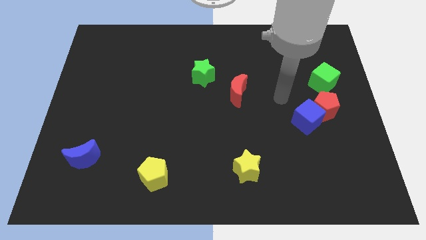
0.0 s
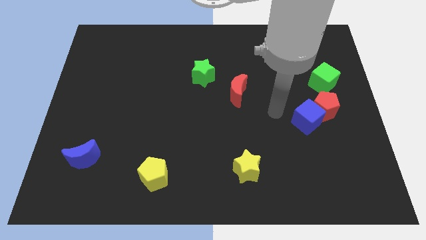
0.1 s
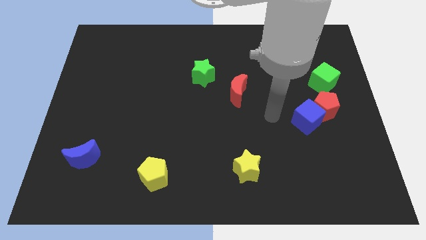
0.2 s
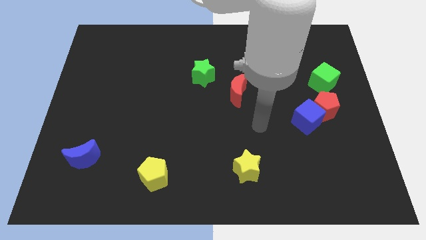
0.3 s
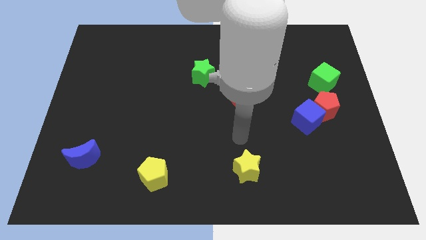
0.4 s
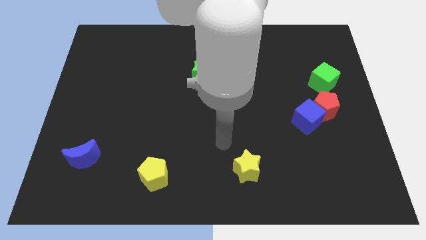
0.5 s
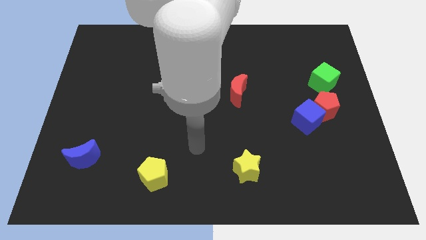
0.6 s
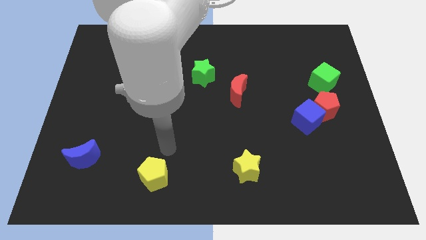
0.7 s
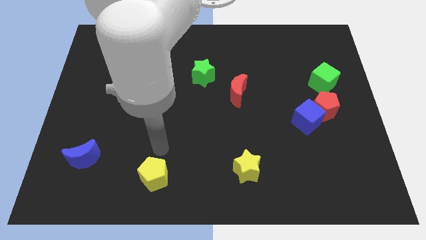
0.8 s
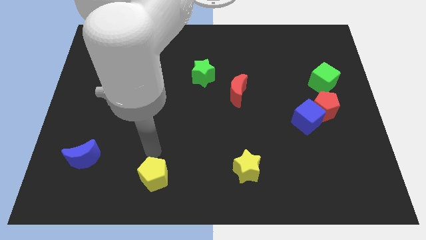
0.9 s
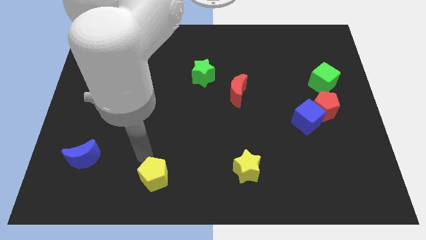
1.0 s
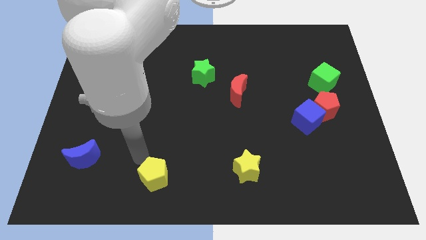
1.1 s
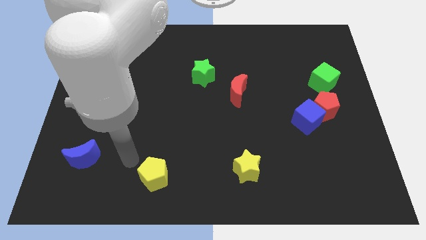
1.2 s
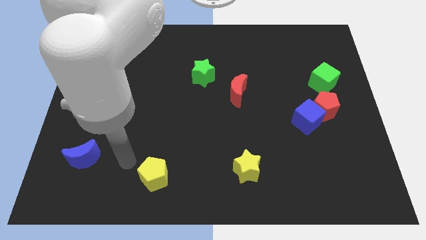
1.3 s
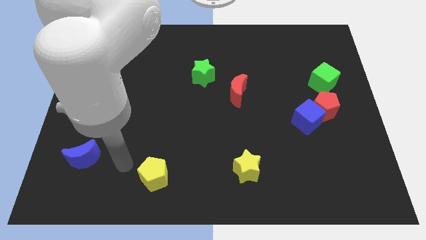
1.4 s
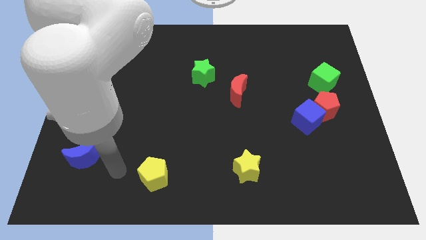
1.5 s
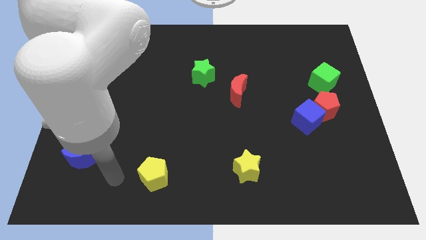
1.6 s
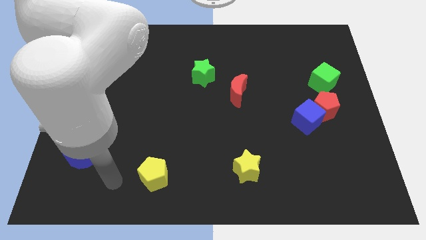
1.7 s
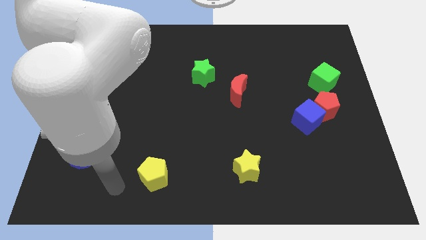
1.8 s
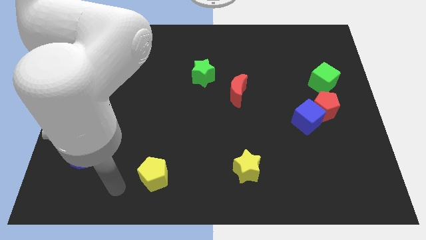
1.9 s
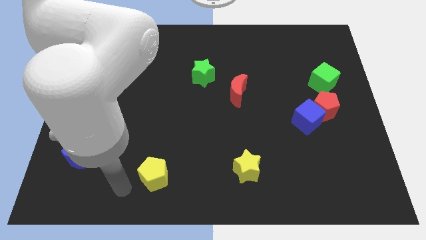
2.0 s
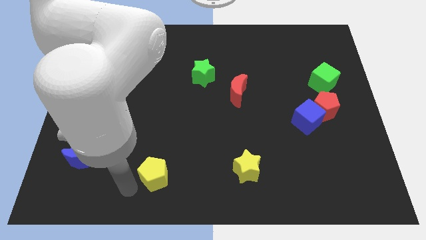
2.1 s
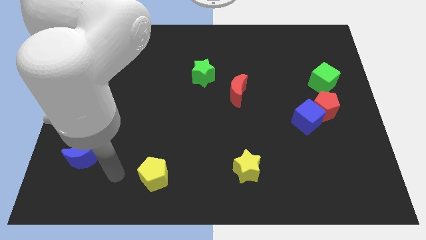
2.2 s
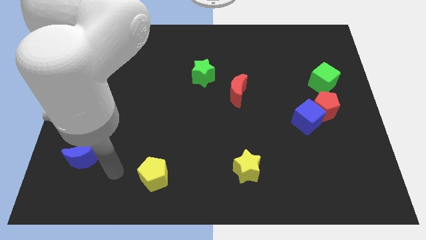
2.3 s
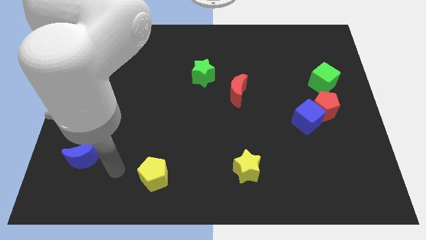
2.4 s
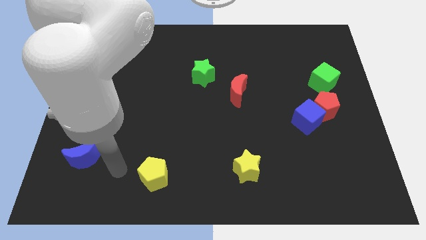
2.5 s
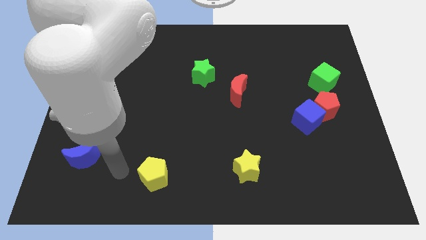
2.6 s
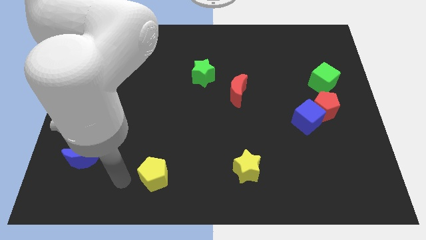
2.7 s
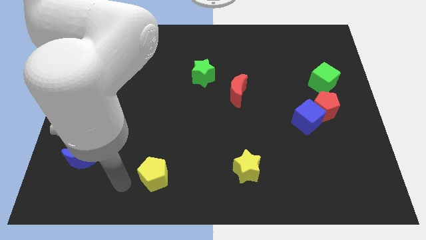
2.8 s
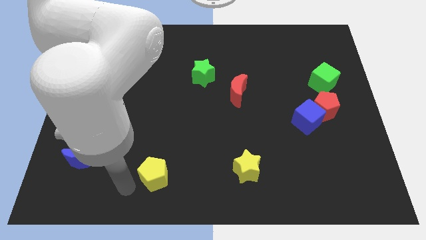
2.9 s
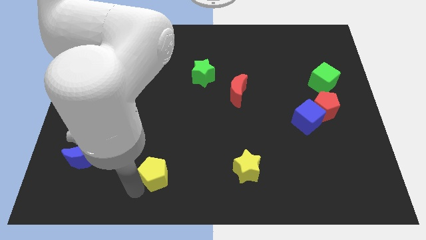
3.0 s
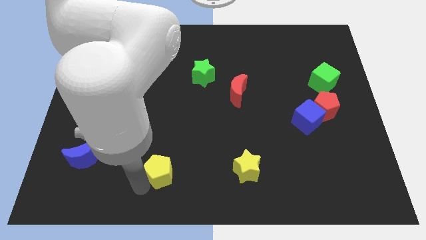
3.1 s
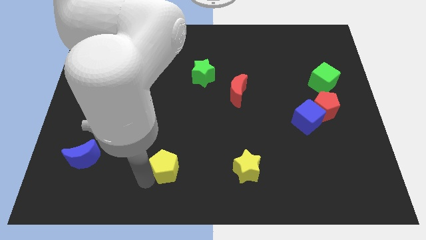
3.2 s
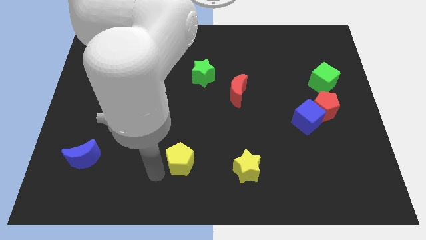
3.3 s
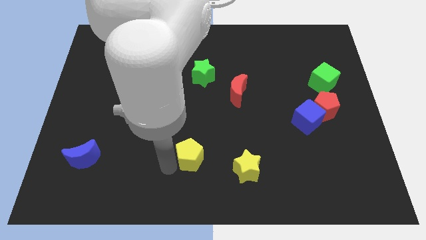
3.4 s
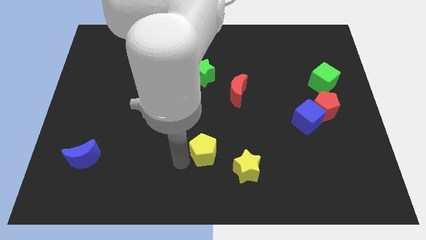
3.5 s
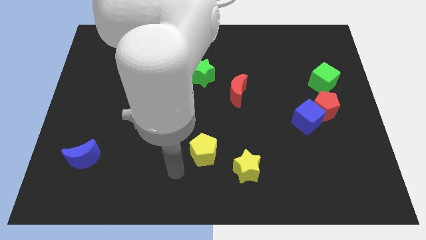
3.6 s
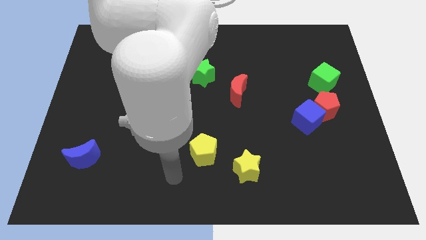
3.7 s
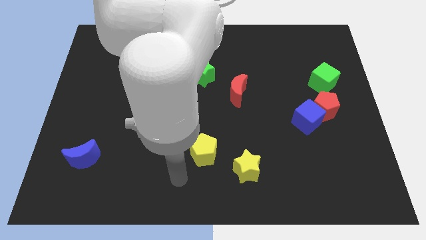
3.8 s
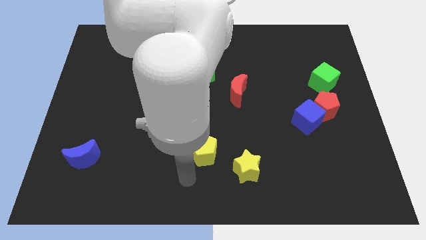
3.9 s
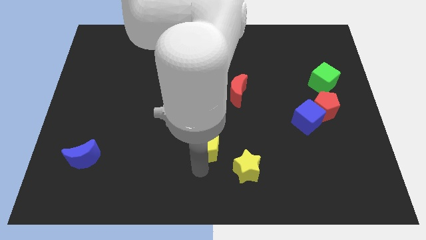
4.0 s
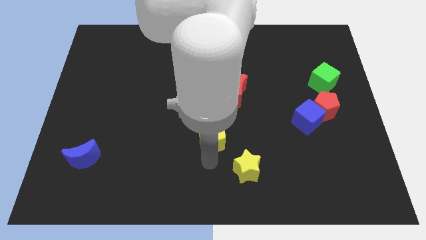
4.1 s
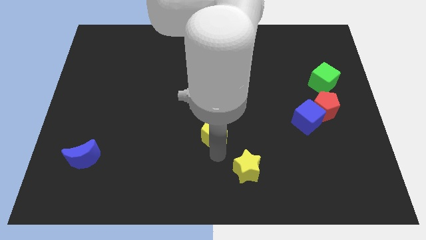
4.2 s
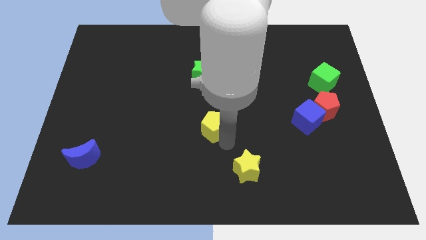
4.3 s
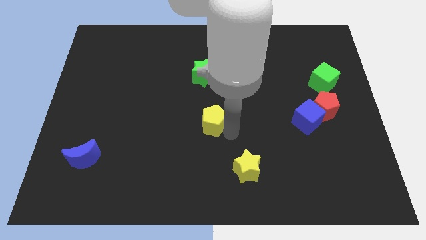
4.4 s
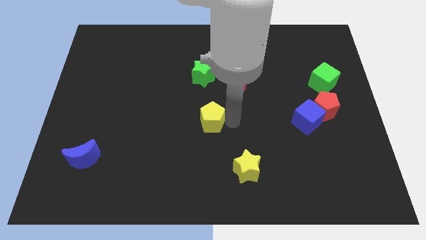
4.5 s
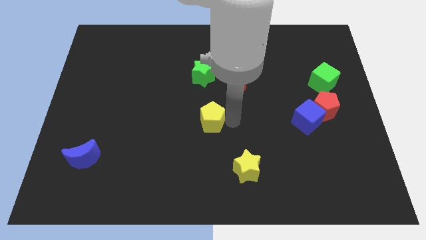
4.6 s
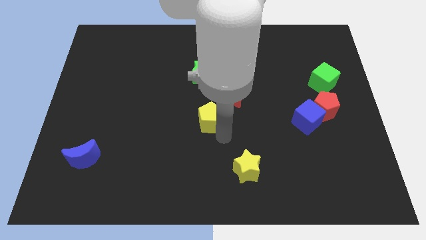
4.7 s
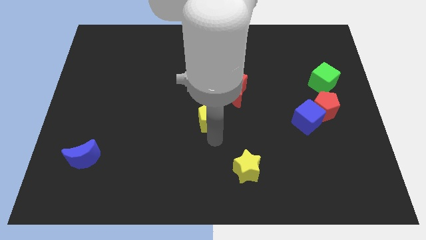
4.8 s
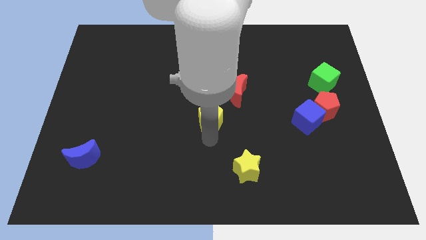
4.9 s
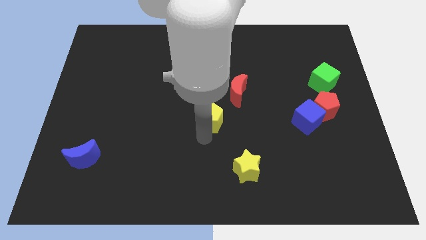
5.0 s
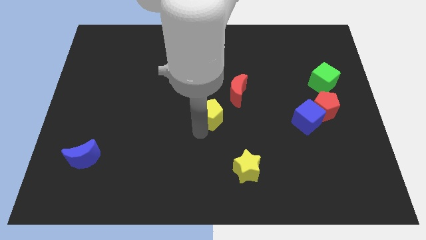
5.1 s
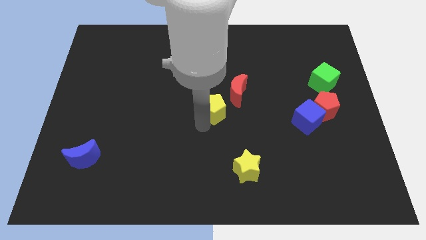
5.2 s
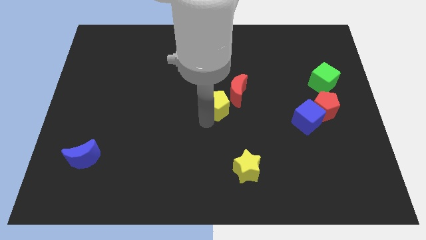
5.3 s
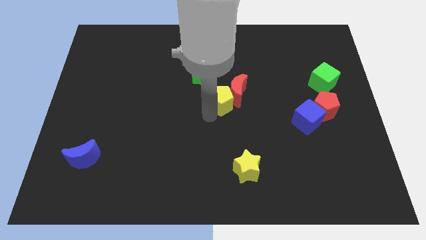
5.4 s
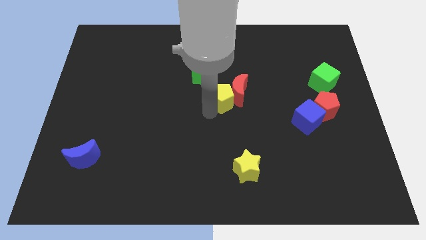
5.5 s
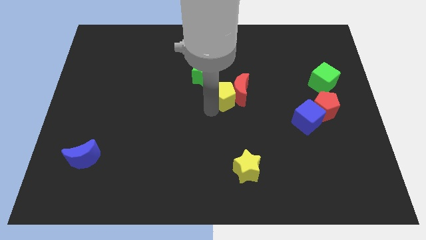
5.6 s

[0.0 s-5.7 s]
move the yellow pentagon towards the red moon

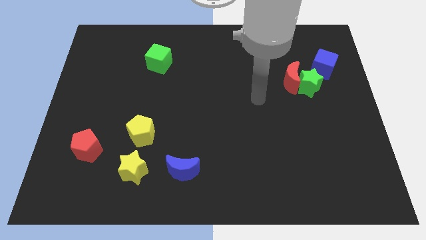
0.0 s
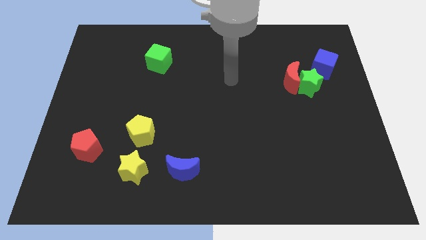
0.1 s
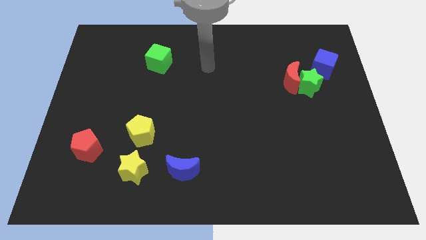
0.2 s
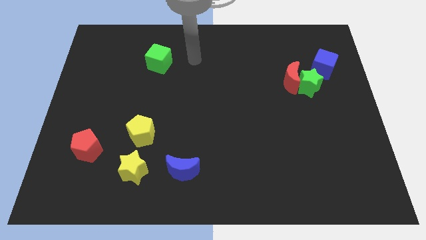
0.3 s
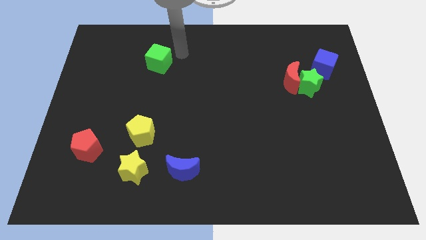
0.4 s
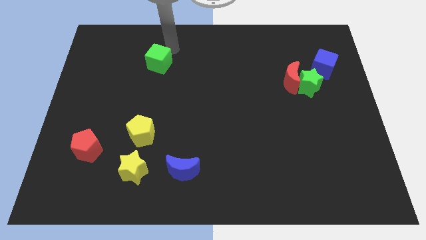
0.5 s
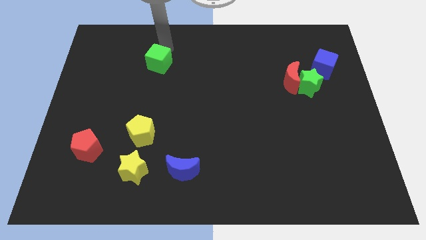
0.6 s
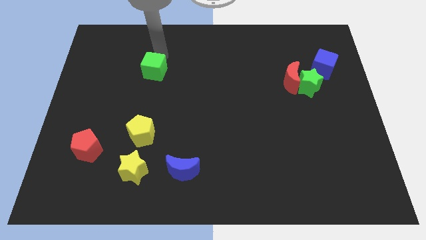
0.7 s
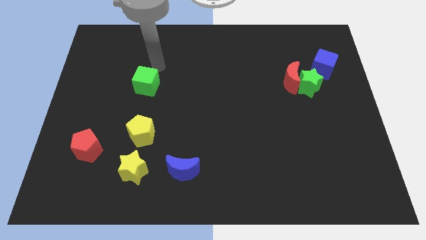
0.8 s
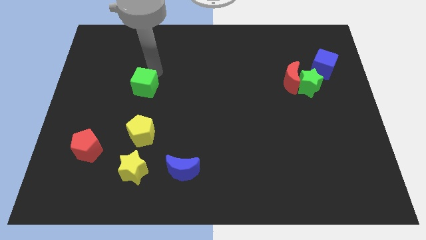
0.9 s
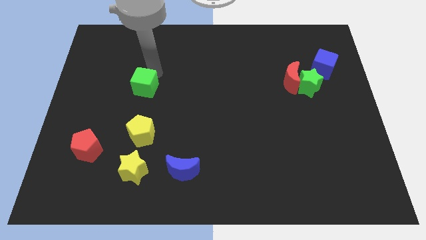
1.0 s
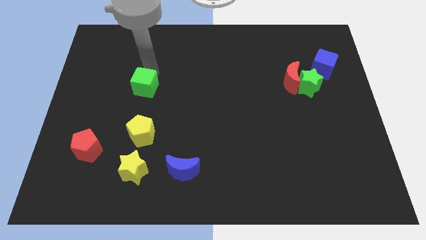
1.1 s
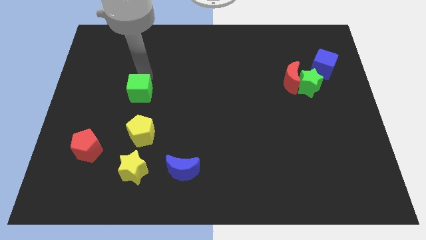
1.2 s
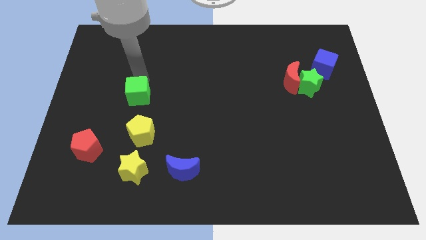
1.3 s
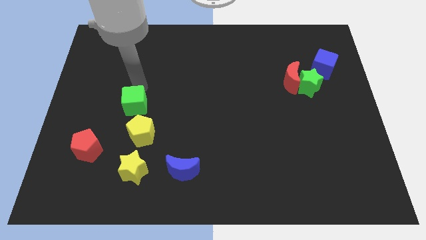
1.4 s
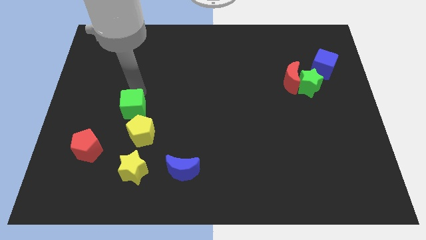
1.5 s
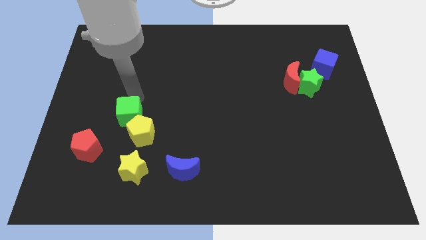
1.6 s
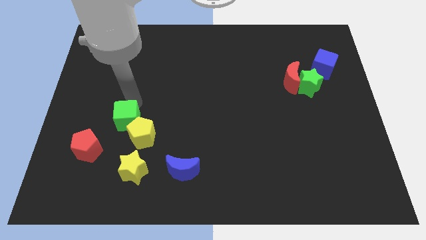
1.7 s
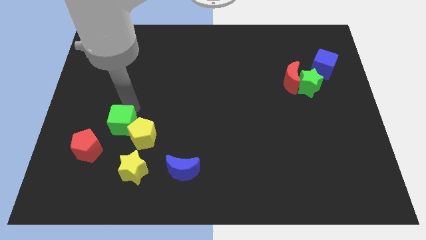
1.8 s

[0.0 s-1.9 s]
move the green cube close to the yellow pentagon

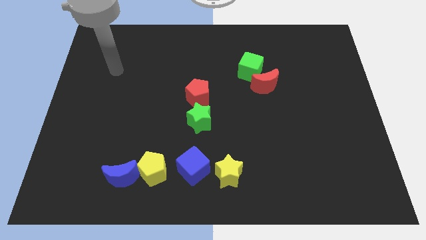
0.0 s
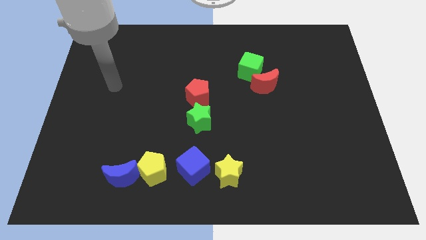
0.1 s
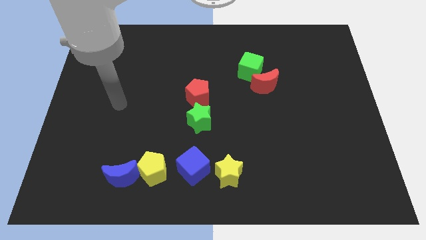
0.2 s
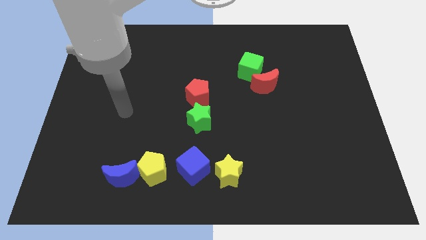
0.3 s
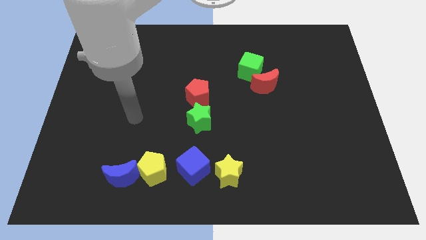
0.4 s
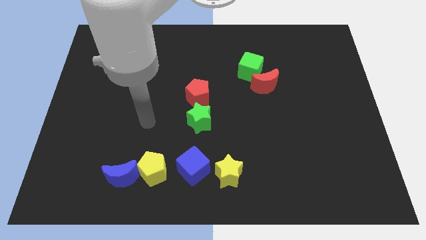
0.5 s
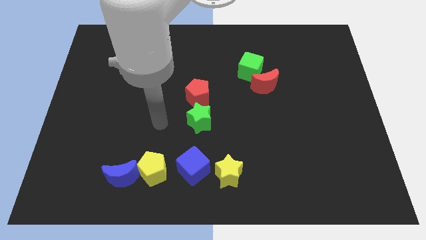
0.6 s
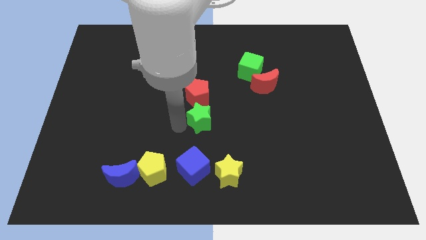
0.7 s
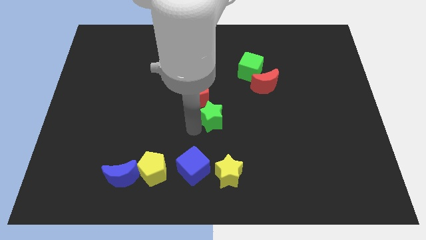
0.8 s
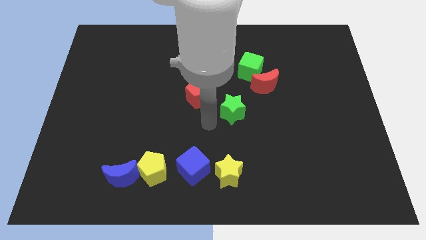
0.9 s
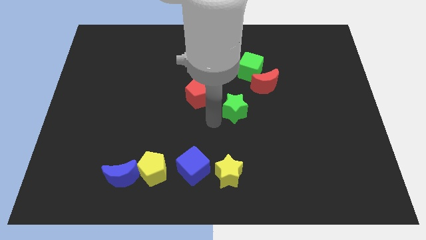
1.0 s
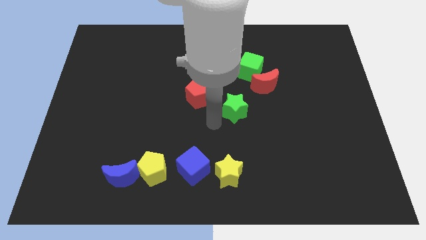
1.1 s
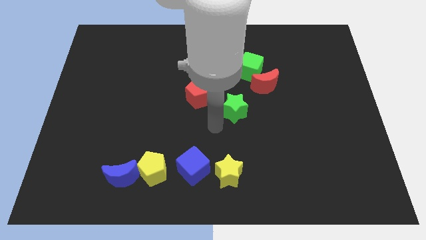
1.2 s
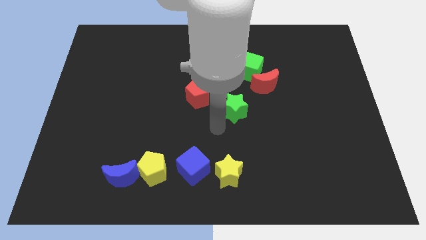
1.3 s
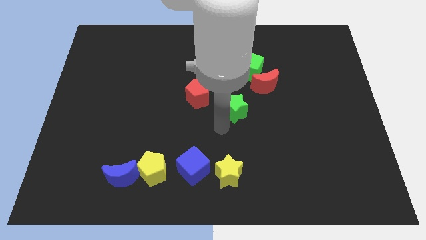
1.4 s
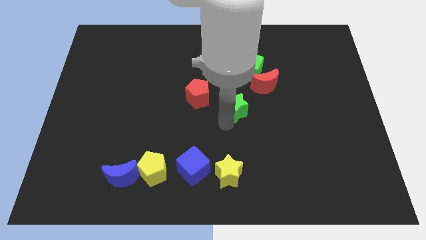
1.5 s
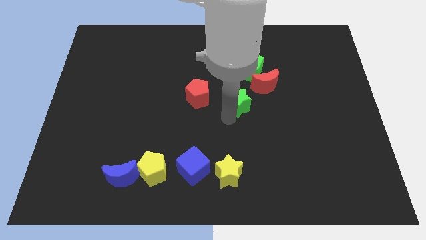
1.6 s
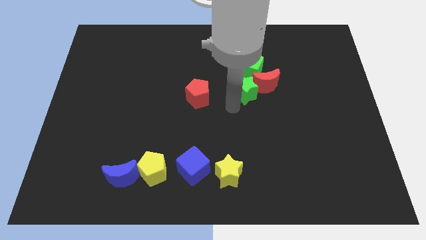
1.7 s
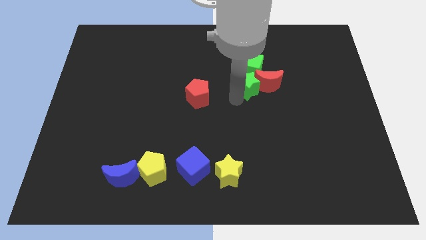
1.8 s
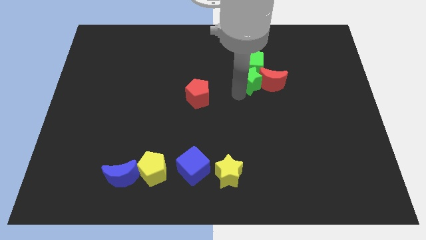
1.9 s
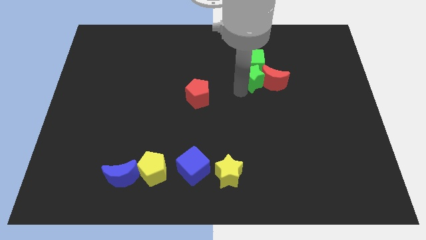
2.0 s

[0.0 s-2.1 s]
push the green star to the green cube
